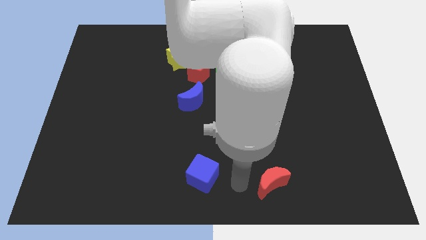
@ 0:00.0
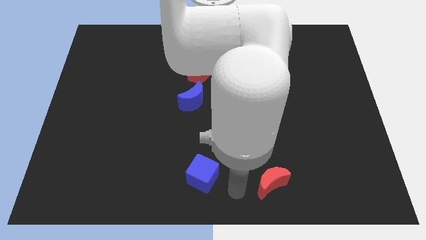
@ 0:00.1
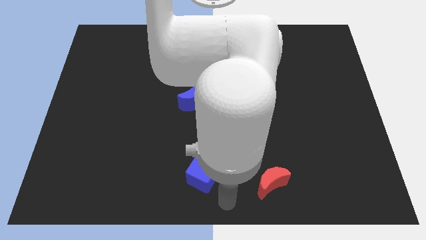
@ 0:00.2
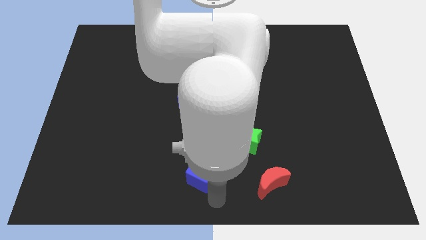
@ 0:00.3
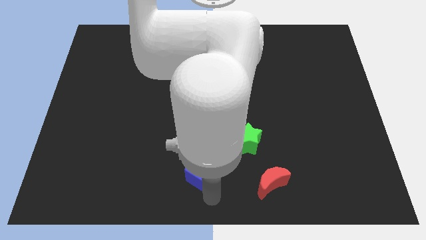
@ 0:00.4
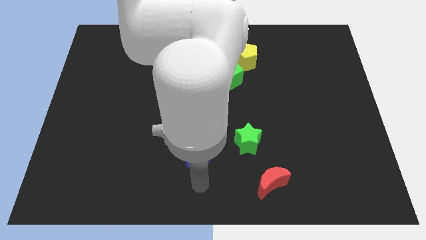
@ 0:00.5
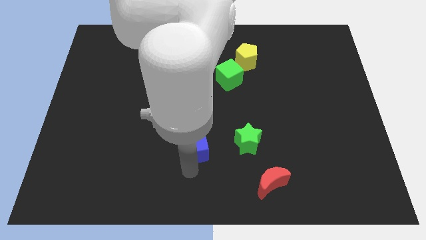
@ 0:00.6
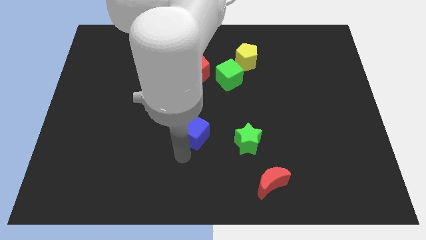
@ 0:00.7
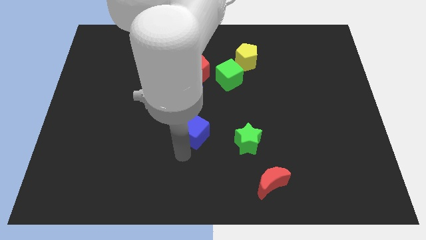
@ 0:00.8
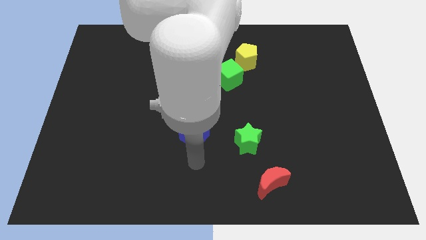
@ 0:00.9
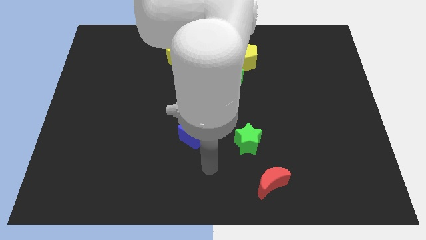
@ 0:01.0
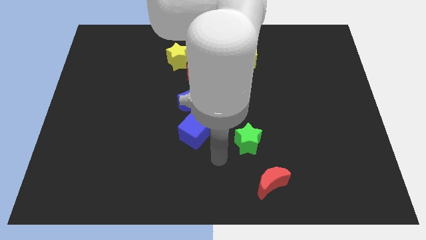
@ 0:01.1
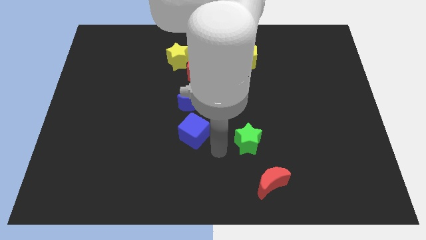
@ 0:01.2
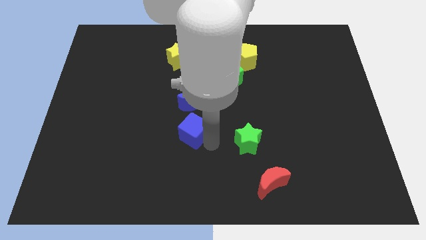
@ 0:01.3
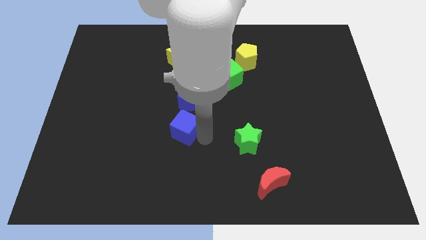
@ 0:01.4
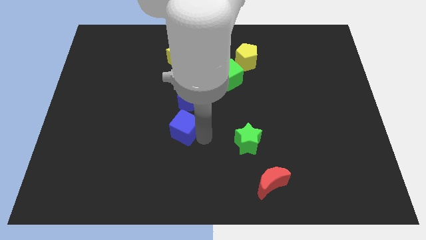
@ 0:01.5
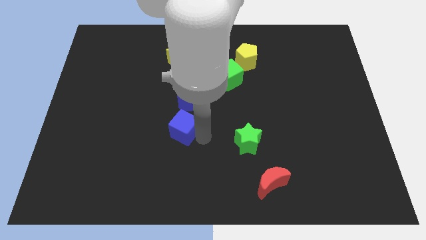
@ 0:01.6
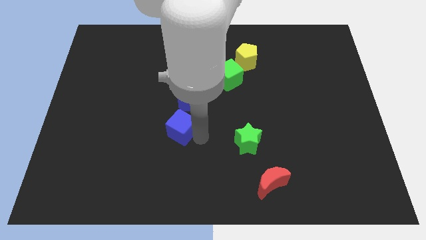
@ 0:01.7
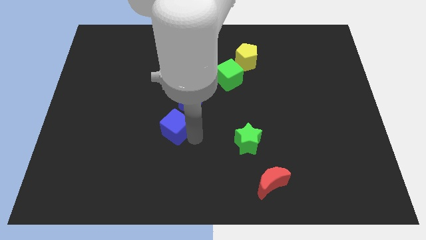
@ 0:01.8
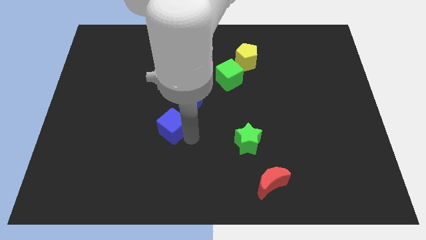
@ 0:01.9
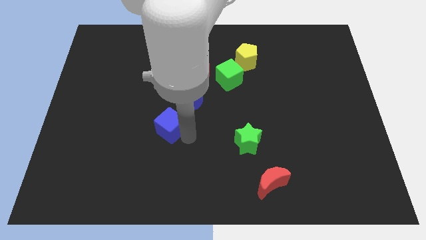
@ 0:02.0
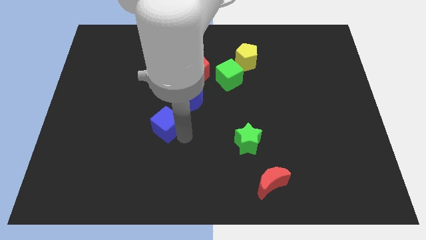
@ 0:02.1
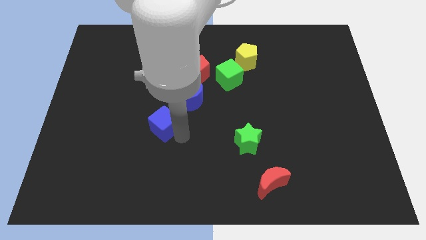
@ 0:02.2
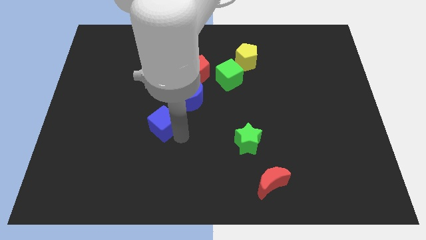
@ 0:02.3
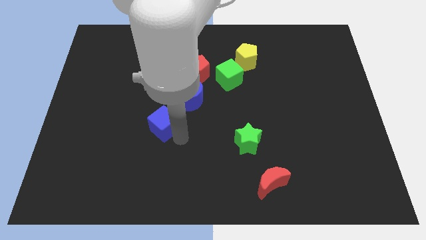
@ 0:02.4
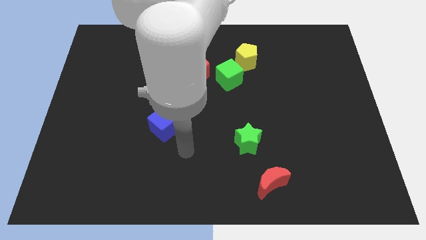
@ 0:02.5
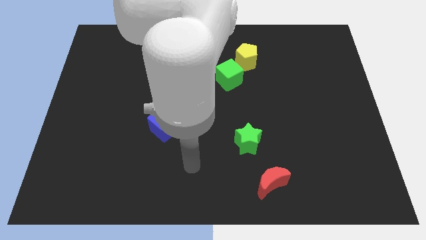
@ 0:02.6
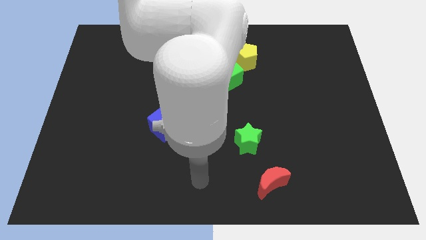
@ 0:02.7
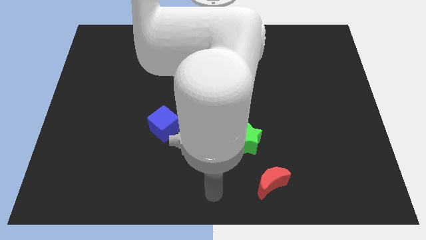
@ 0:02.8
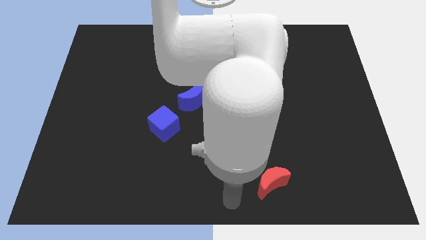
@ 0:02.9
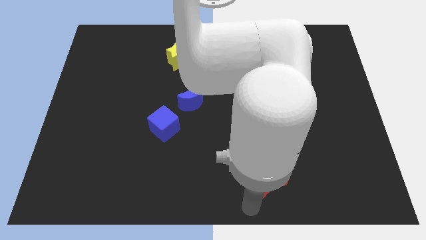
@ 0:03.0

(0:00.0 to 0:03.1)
push the blue cube to the bottom left corner of the blue crescent

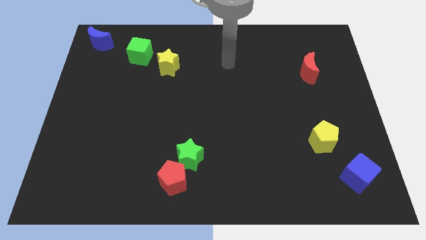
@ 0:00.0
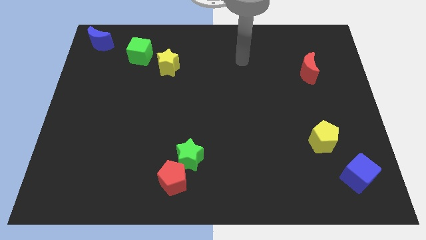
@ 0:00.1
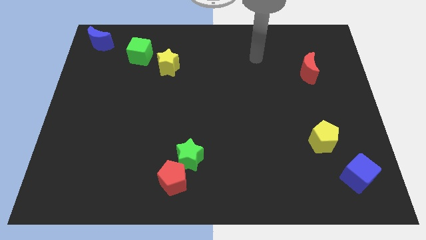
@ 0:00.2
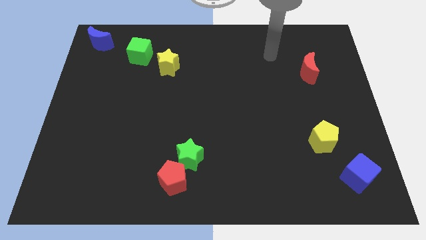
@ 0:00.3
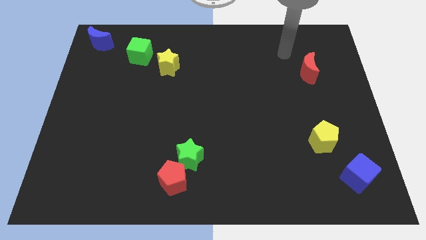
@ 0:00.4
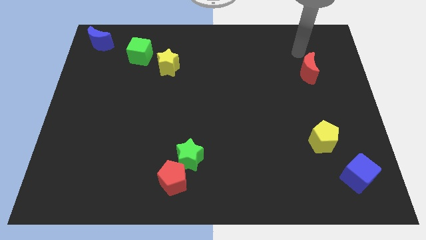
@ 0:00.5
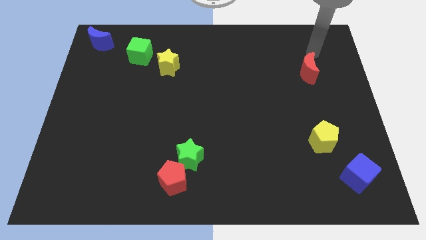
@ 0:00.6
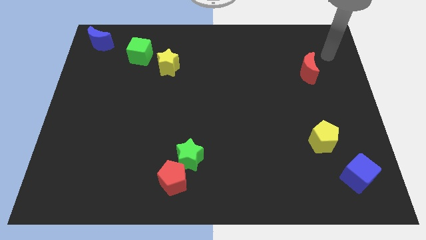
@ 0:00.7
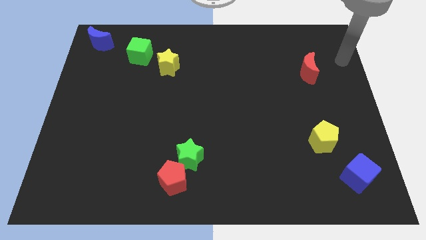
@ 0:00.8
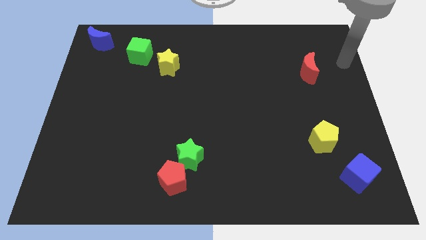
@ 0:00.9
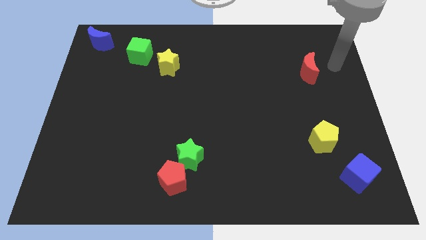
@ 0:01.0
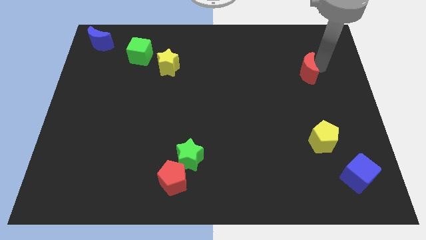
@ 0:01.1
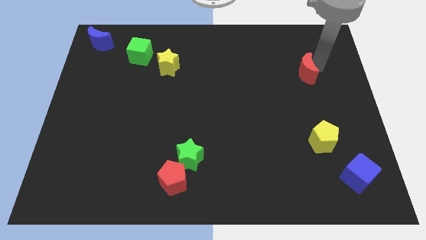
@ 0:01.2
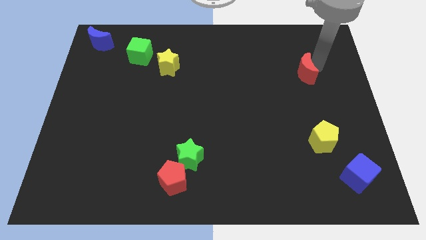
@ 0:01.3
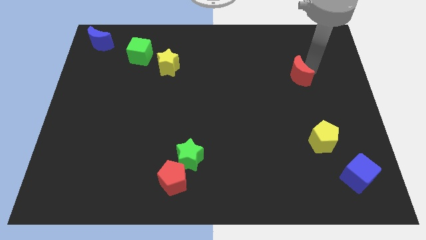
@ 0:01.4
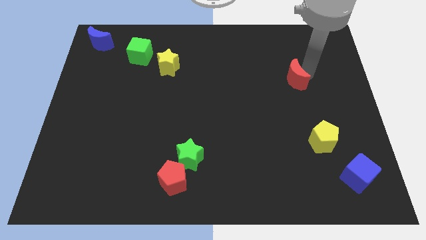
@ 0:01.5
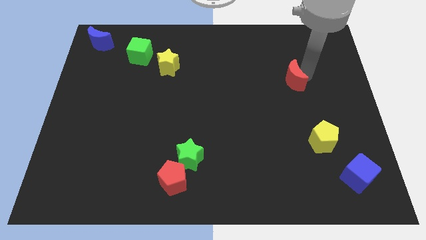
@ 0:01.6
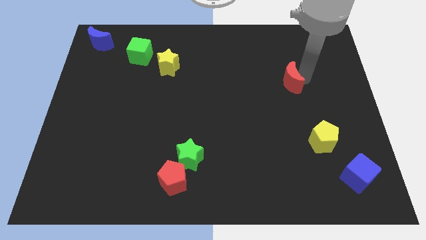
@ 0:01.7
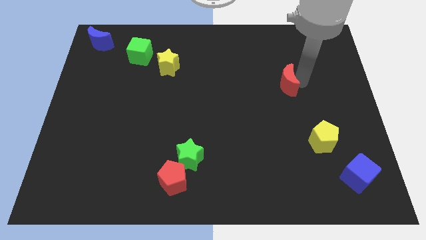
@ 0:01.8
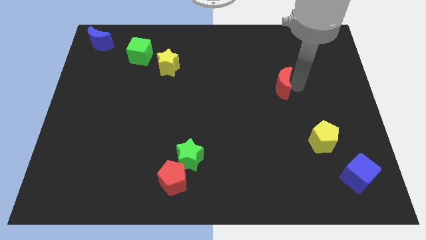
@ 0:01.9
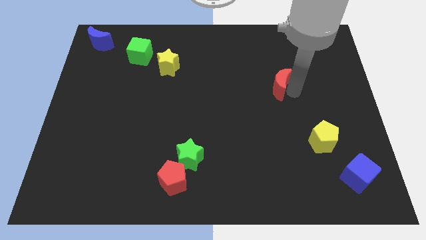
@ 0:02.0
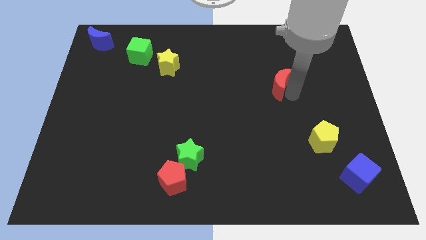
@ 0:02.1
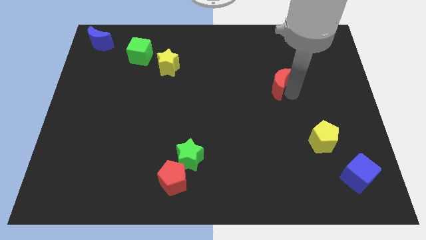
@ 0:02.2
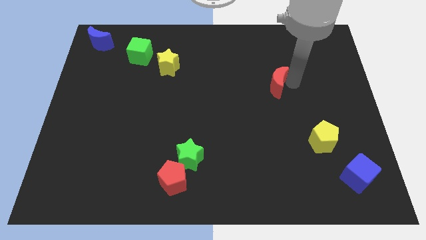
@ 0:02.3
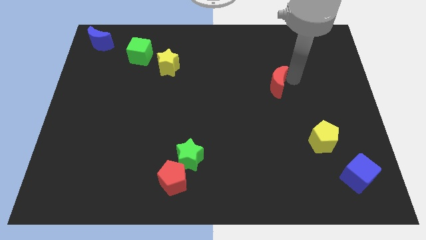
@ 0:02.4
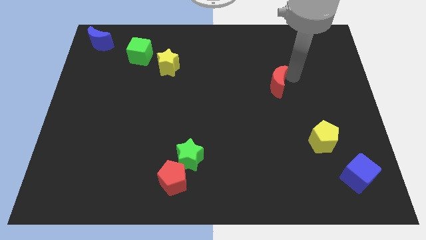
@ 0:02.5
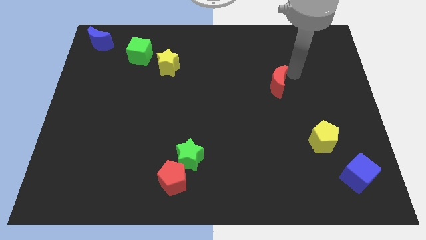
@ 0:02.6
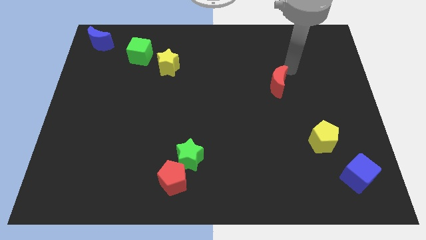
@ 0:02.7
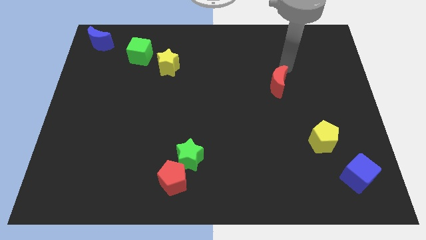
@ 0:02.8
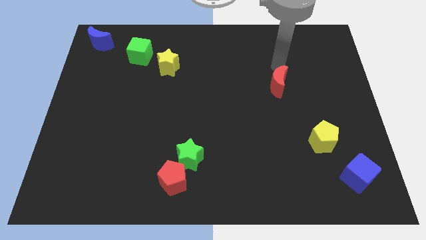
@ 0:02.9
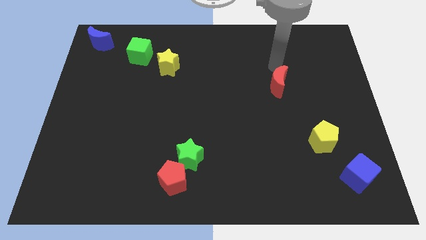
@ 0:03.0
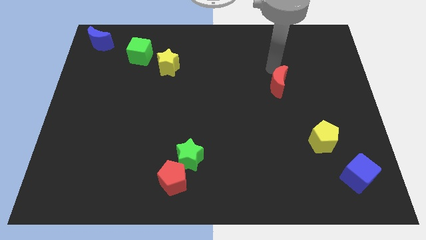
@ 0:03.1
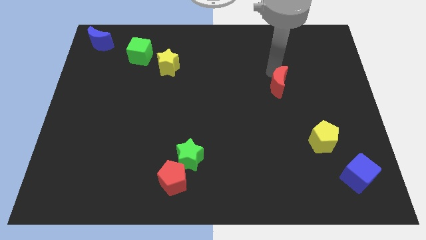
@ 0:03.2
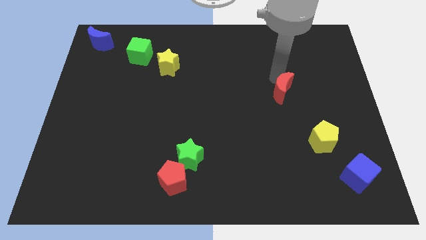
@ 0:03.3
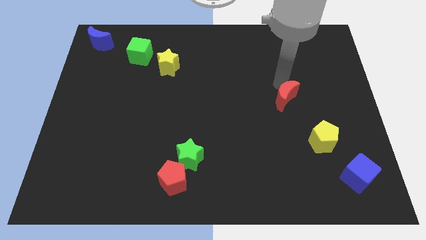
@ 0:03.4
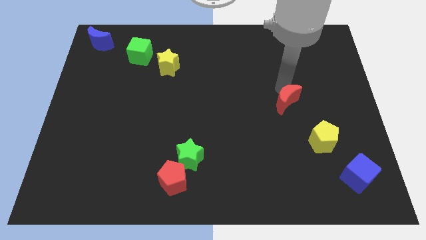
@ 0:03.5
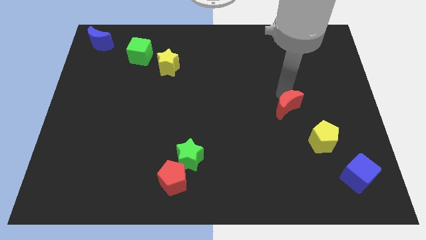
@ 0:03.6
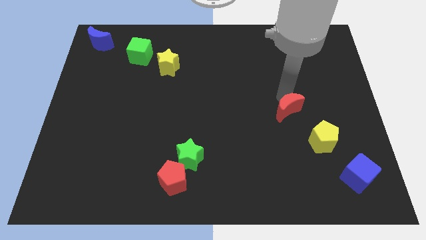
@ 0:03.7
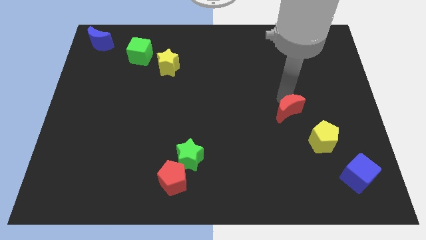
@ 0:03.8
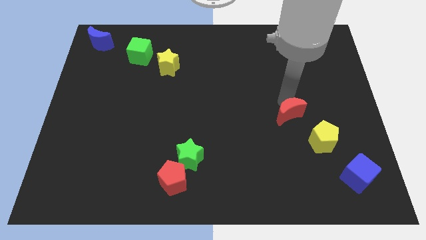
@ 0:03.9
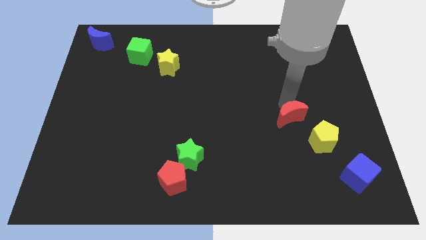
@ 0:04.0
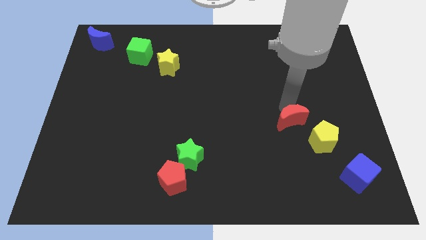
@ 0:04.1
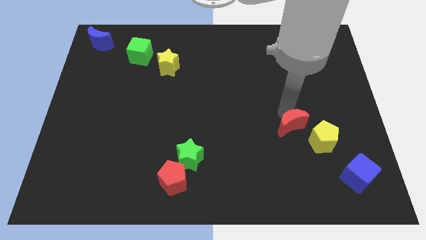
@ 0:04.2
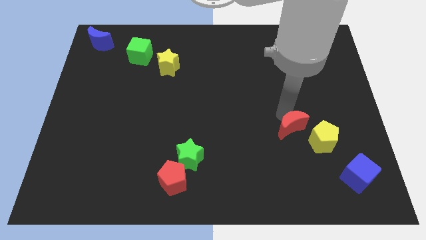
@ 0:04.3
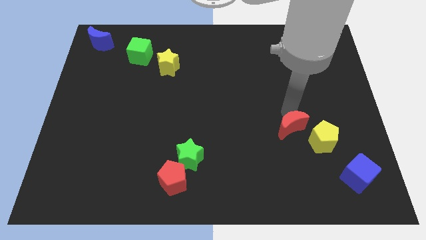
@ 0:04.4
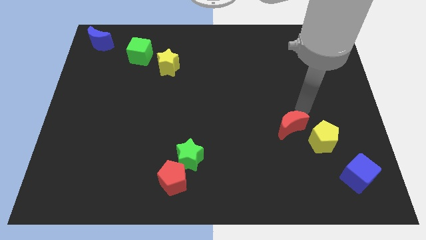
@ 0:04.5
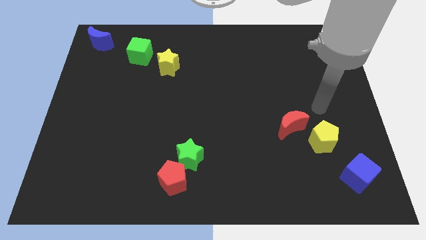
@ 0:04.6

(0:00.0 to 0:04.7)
move red crescent left to yellow pentagon

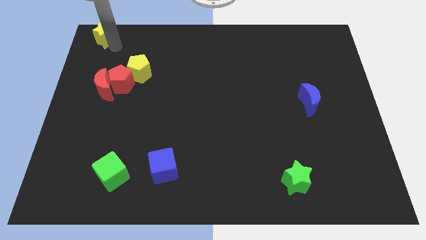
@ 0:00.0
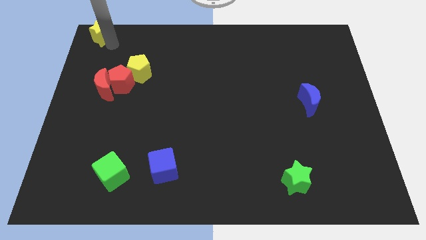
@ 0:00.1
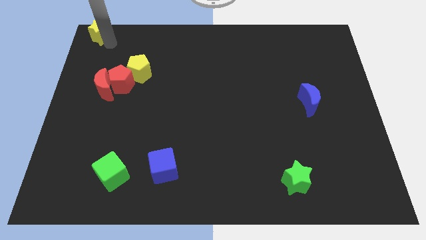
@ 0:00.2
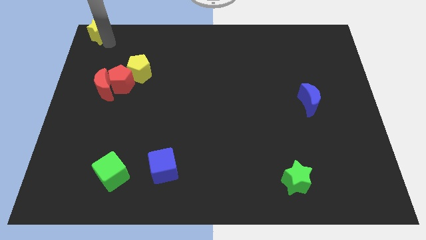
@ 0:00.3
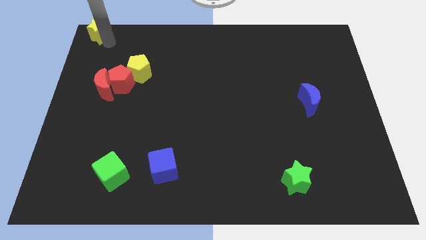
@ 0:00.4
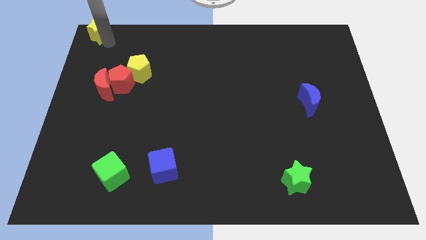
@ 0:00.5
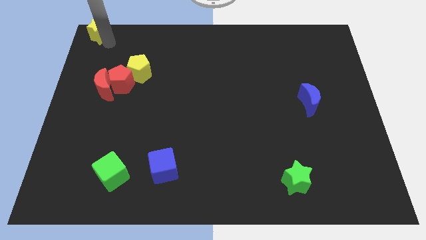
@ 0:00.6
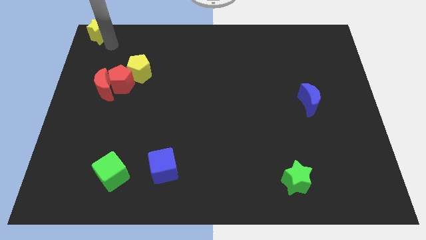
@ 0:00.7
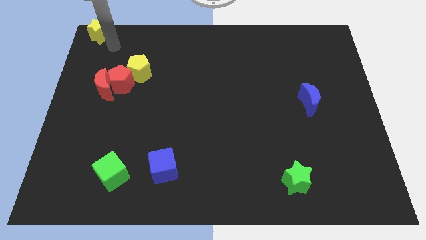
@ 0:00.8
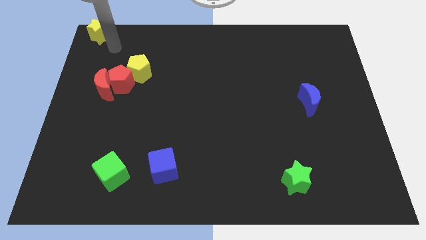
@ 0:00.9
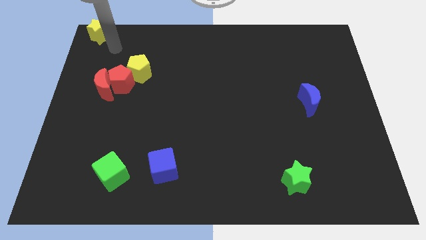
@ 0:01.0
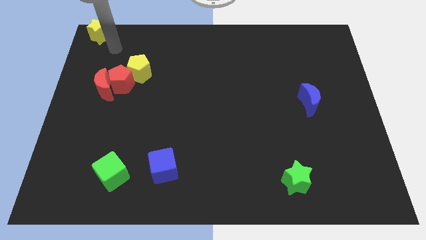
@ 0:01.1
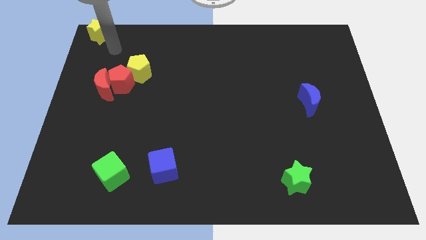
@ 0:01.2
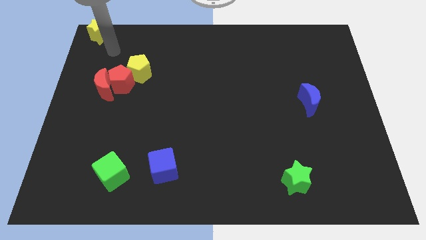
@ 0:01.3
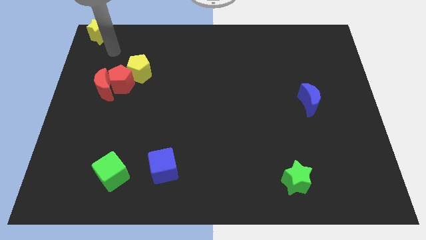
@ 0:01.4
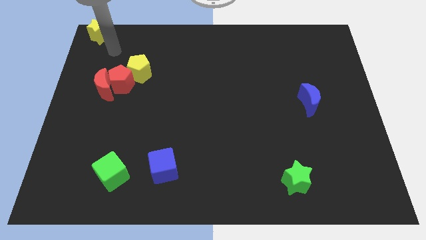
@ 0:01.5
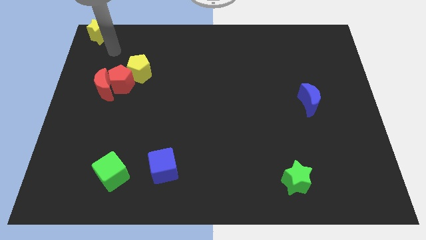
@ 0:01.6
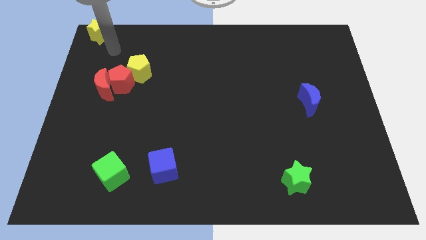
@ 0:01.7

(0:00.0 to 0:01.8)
move the yellow star to the top left corner of the board
